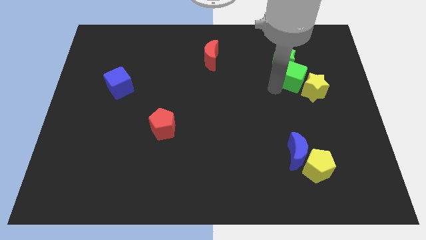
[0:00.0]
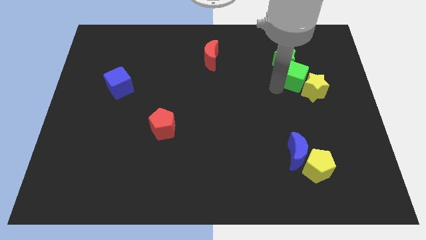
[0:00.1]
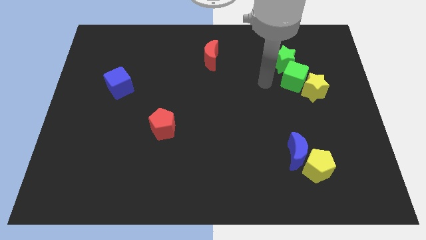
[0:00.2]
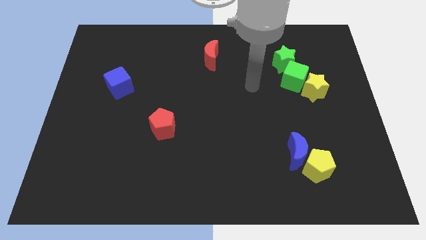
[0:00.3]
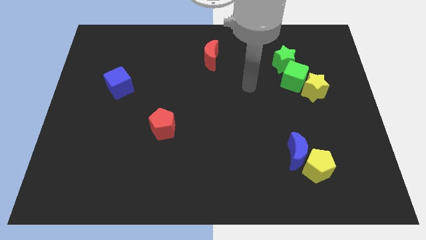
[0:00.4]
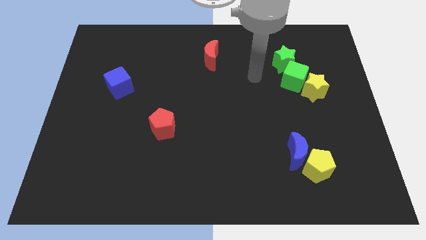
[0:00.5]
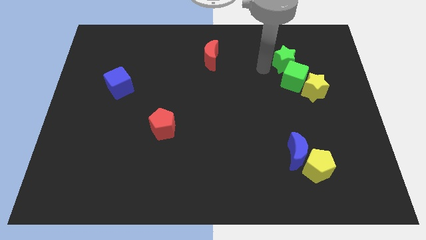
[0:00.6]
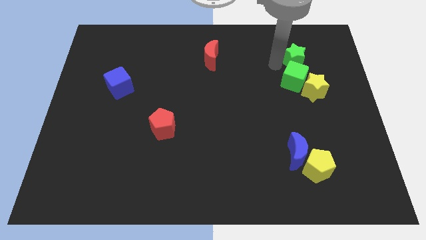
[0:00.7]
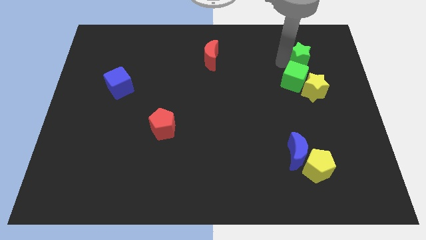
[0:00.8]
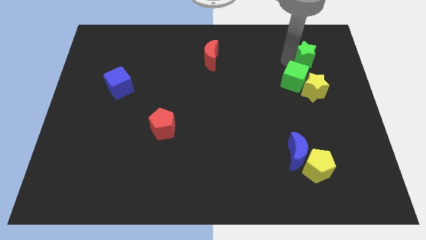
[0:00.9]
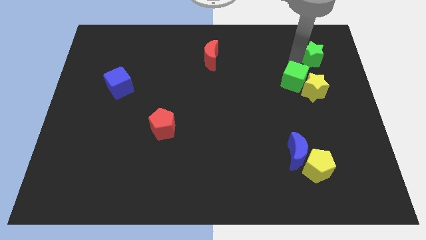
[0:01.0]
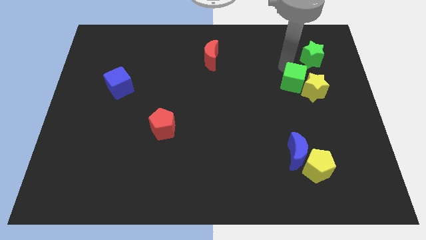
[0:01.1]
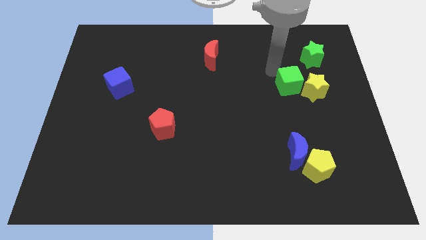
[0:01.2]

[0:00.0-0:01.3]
push the green star away from the green cube

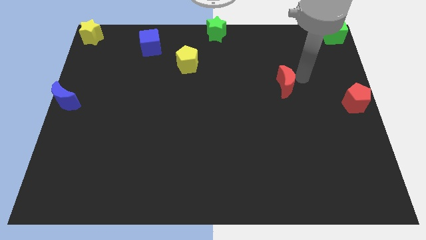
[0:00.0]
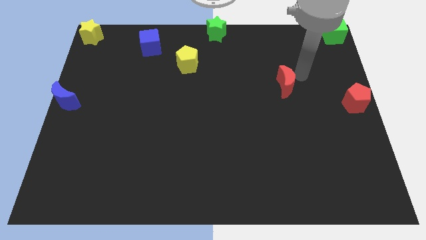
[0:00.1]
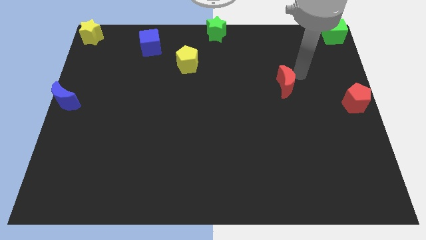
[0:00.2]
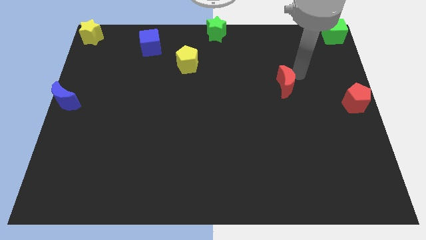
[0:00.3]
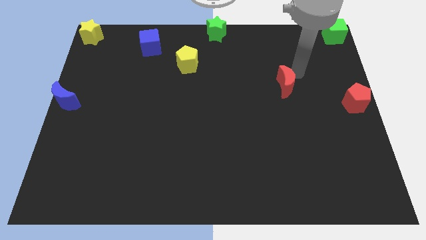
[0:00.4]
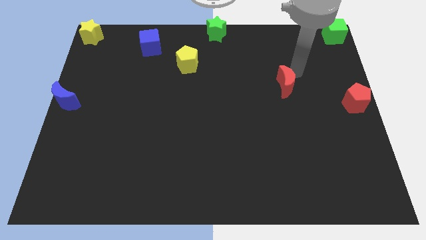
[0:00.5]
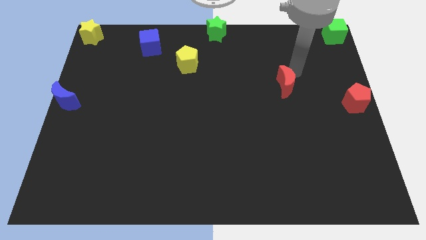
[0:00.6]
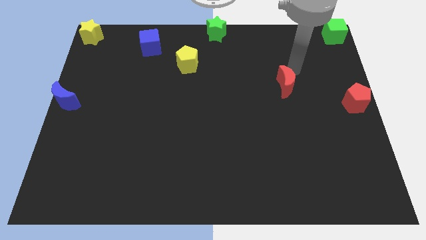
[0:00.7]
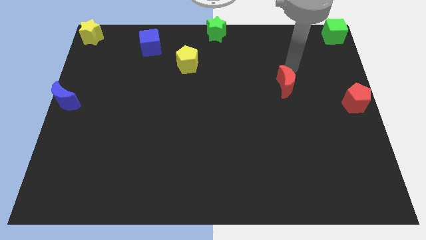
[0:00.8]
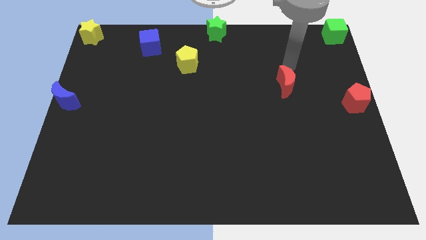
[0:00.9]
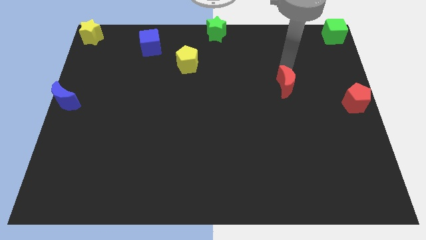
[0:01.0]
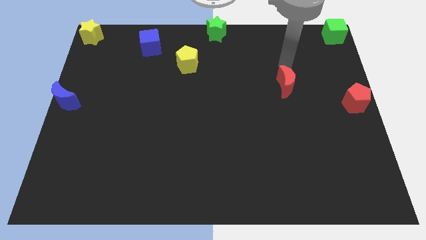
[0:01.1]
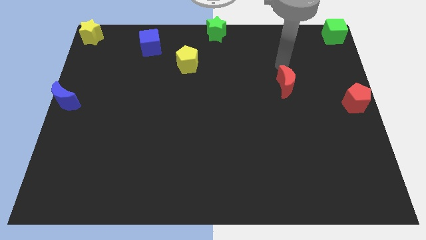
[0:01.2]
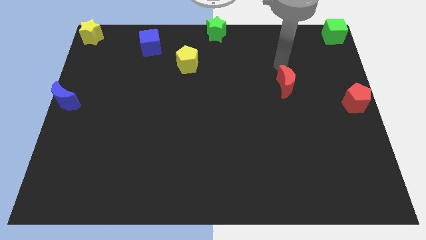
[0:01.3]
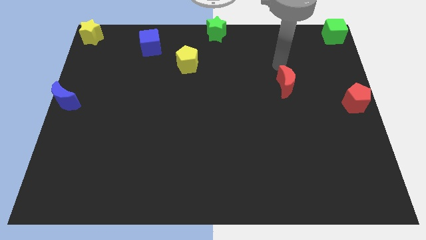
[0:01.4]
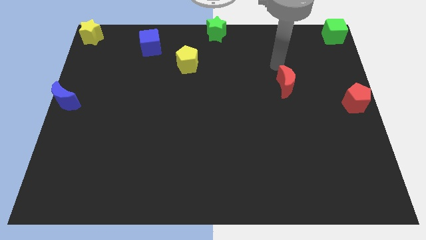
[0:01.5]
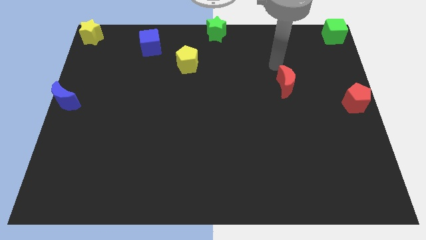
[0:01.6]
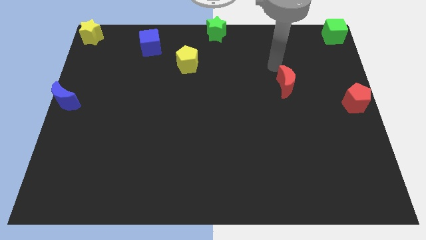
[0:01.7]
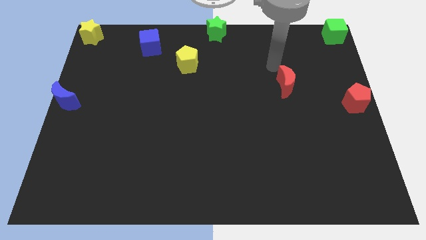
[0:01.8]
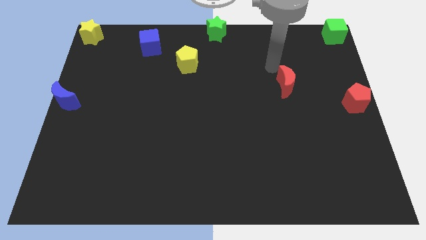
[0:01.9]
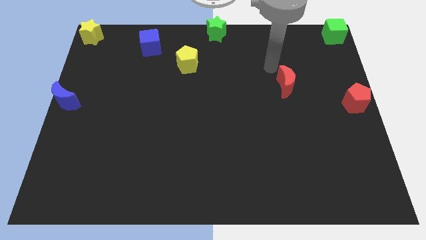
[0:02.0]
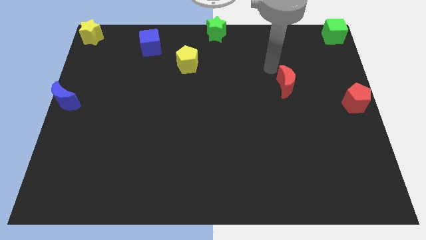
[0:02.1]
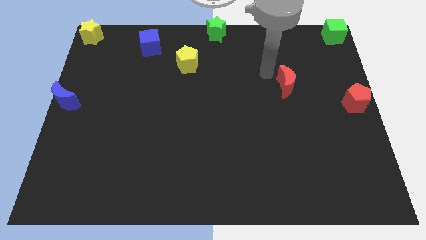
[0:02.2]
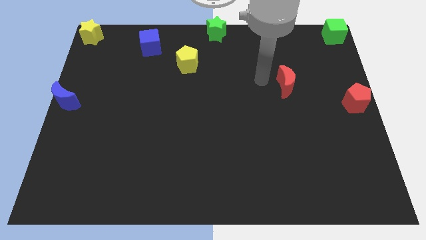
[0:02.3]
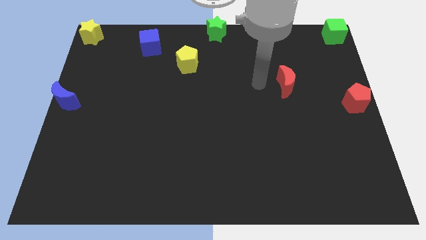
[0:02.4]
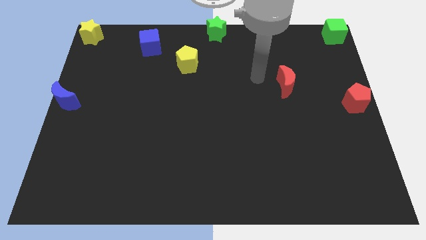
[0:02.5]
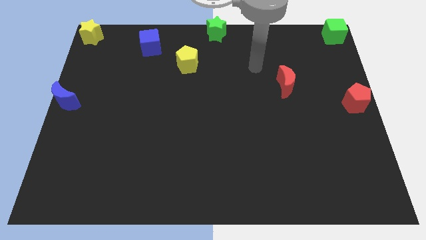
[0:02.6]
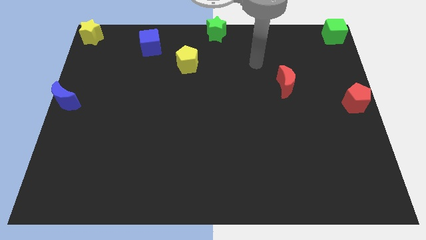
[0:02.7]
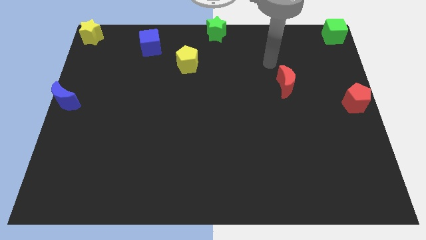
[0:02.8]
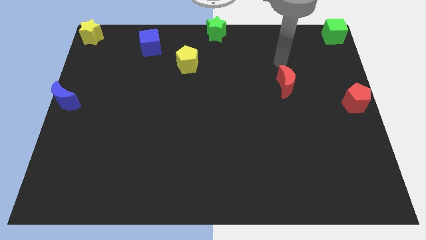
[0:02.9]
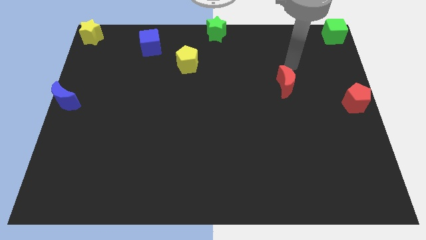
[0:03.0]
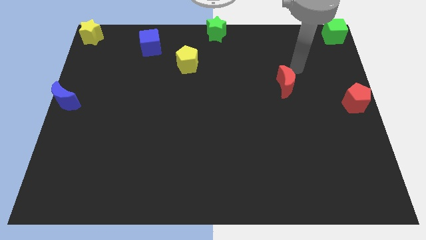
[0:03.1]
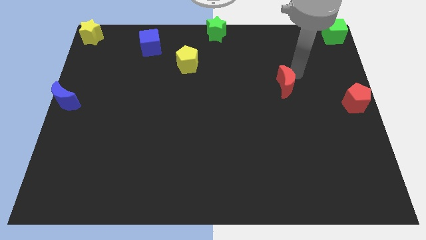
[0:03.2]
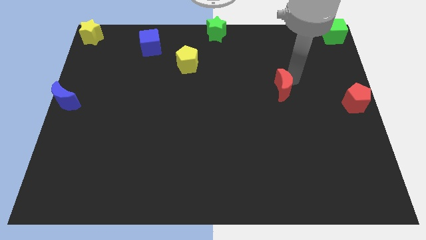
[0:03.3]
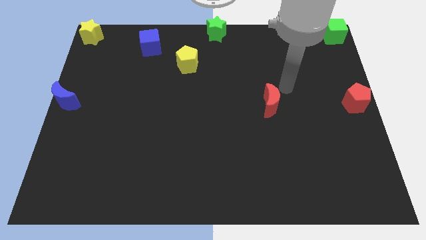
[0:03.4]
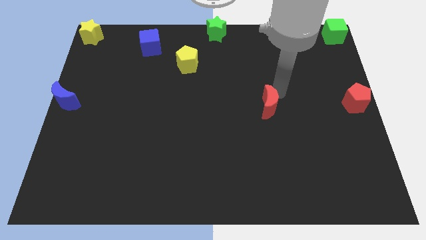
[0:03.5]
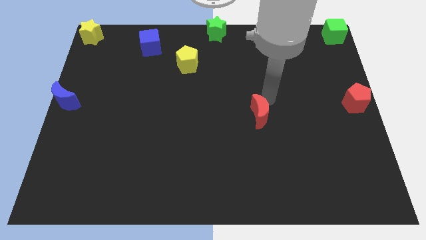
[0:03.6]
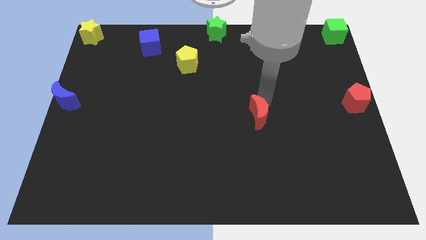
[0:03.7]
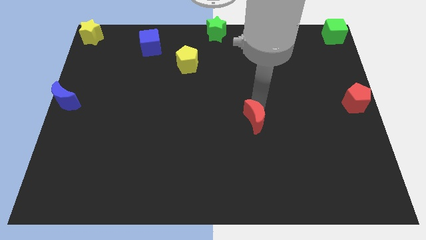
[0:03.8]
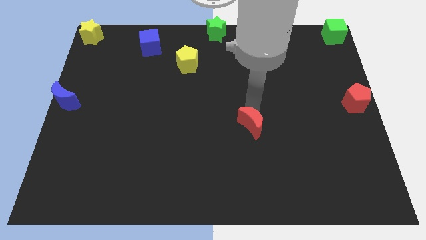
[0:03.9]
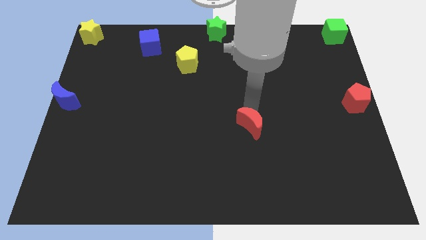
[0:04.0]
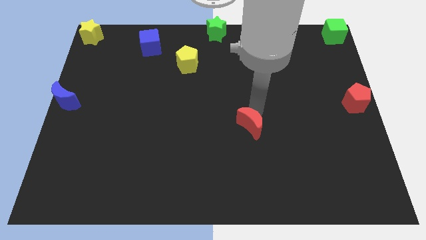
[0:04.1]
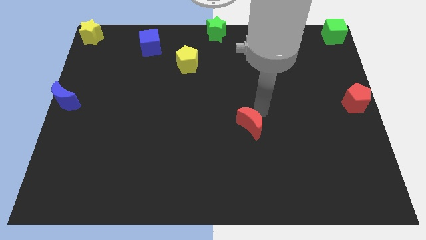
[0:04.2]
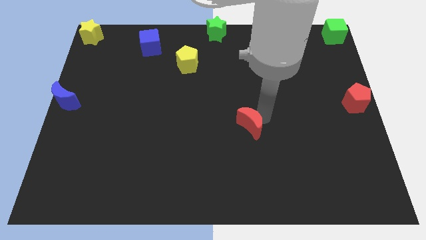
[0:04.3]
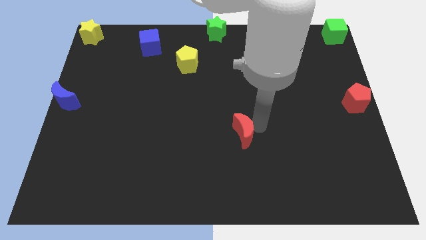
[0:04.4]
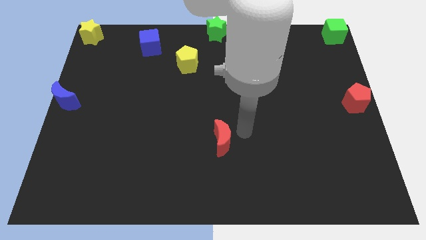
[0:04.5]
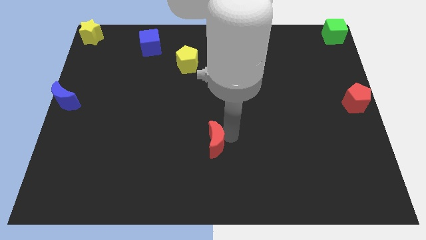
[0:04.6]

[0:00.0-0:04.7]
move red crescent to the center

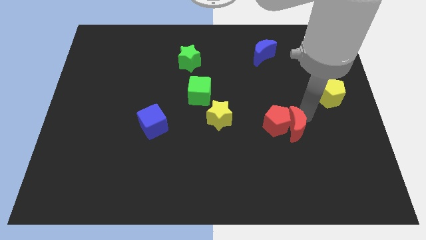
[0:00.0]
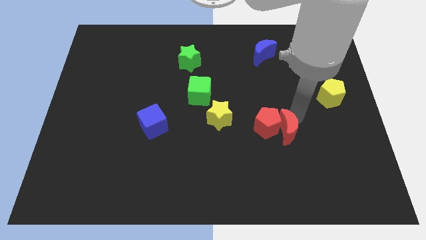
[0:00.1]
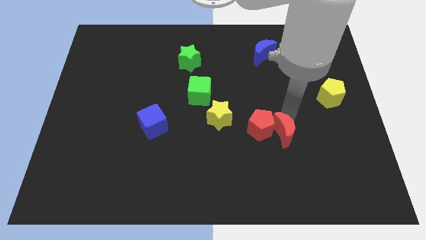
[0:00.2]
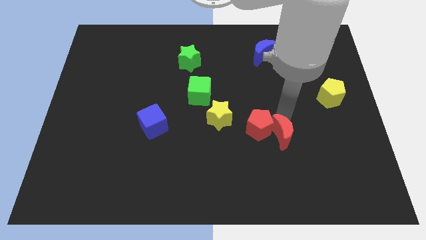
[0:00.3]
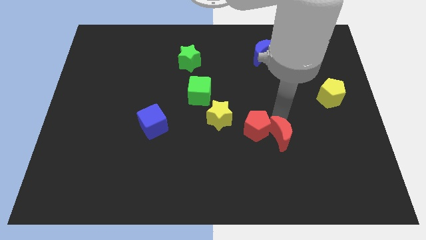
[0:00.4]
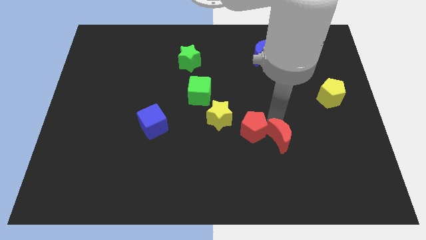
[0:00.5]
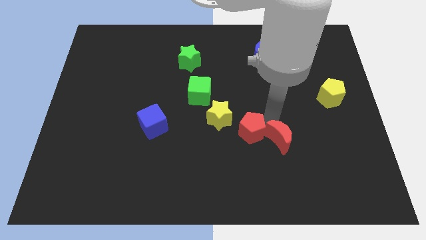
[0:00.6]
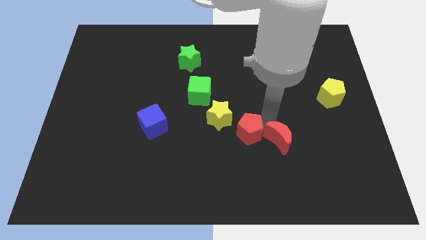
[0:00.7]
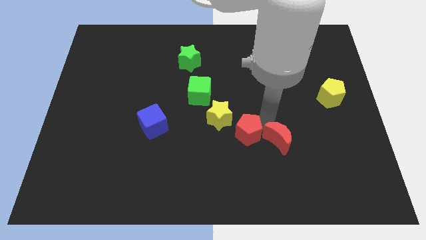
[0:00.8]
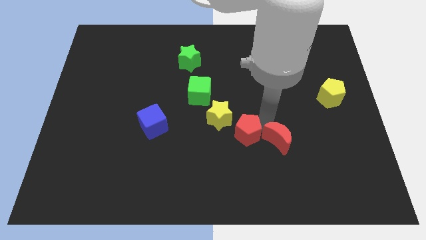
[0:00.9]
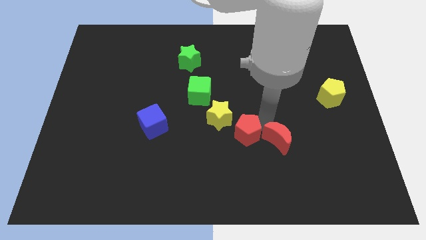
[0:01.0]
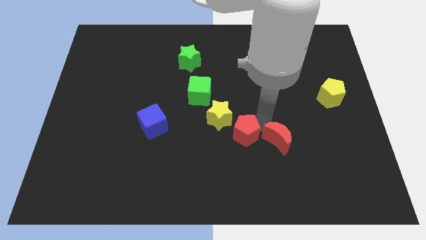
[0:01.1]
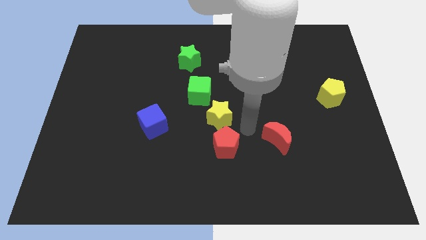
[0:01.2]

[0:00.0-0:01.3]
separate the red pentagon from red crescent

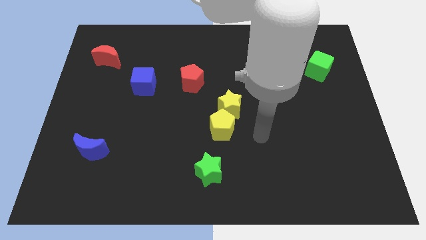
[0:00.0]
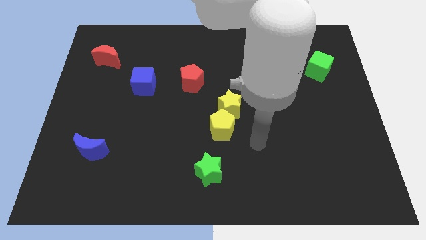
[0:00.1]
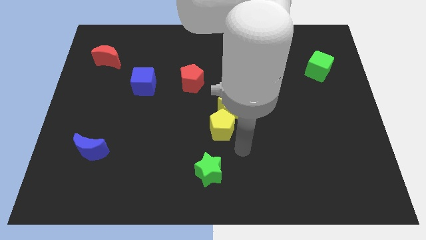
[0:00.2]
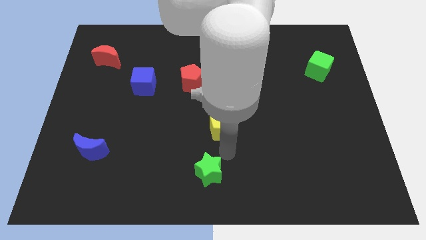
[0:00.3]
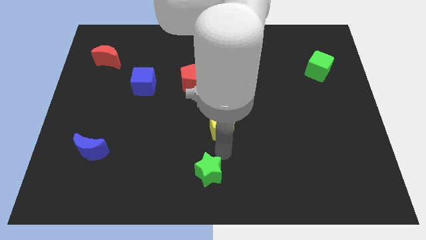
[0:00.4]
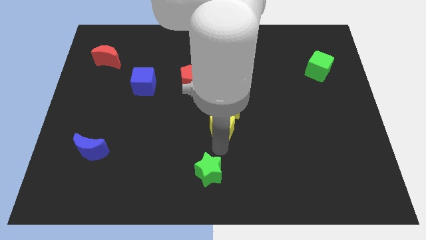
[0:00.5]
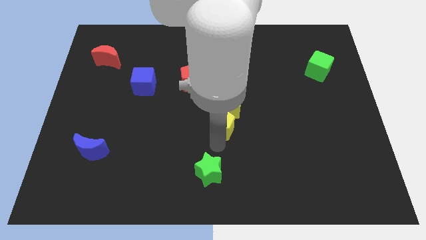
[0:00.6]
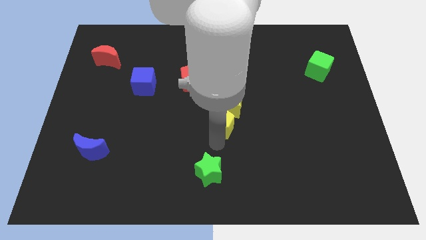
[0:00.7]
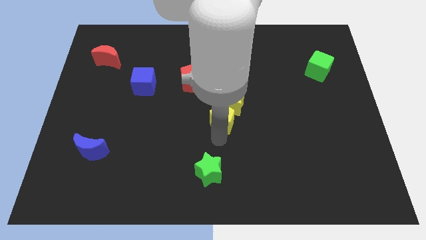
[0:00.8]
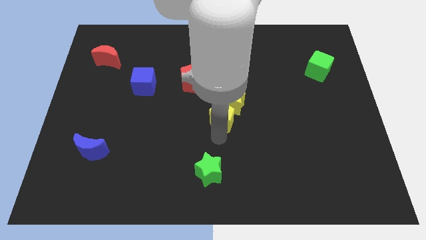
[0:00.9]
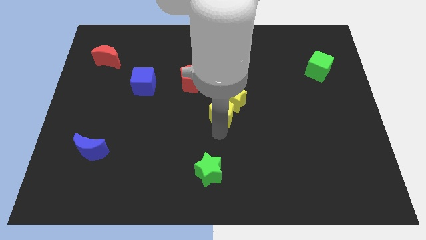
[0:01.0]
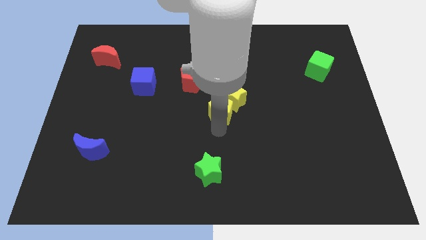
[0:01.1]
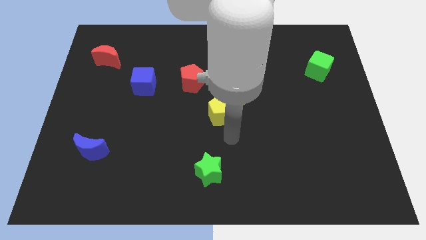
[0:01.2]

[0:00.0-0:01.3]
push yellow pentagon into yellow star

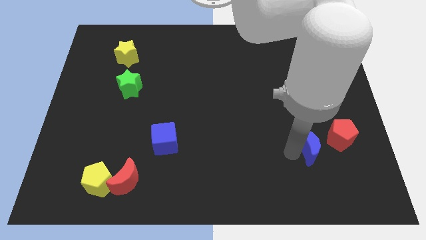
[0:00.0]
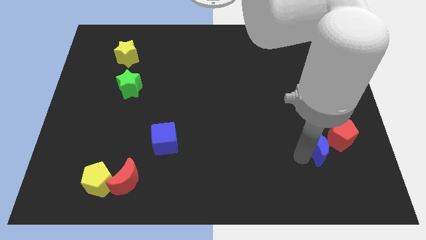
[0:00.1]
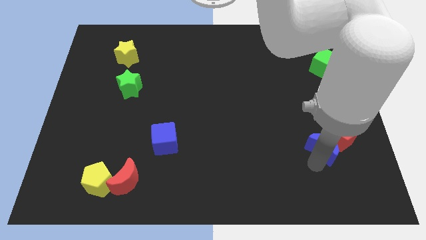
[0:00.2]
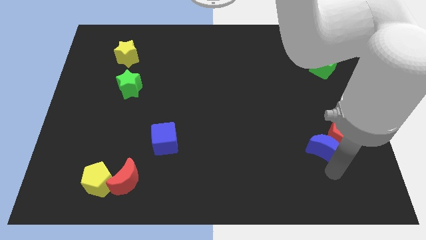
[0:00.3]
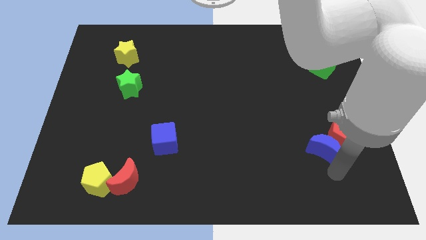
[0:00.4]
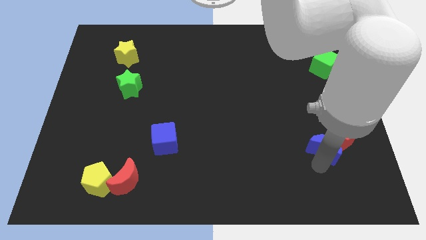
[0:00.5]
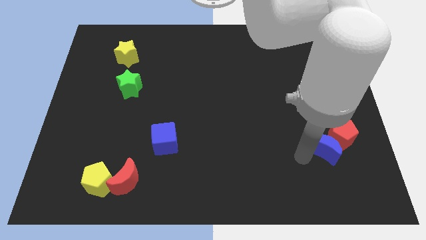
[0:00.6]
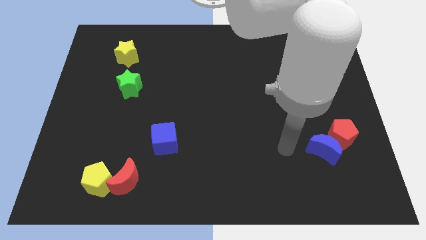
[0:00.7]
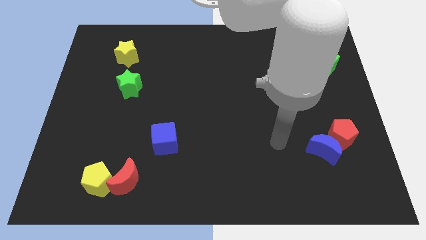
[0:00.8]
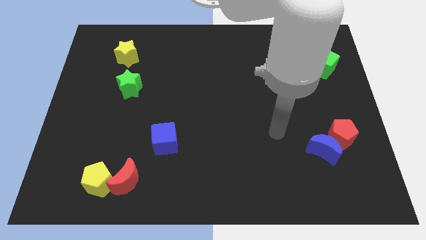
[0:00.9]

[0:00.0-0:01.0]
push blue moon into red pentagon
